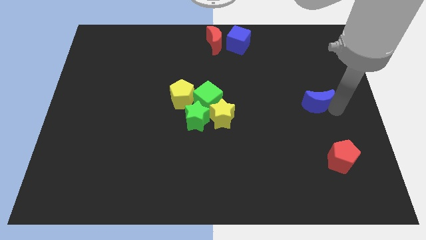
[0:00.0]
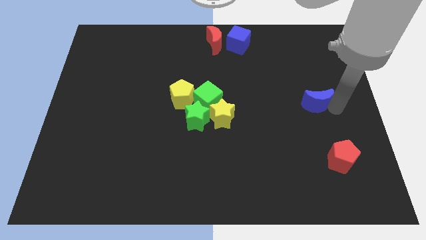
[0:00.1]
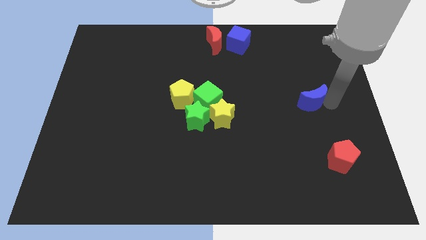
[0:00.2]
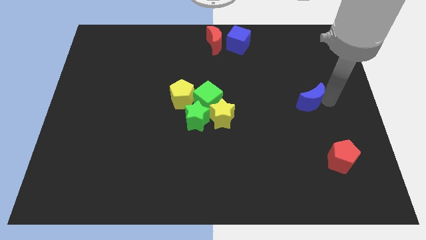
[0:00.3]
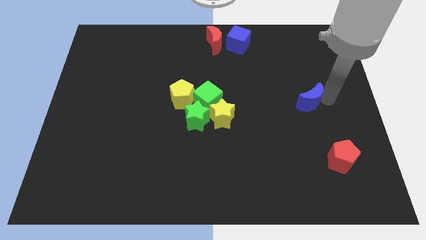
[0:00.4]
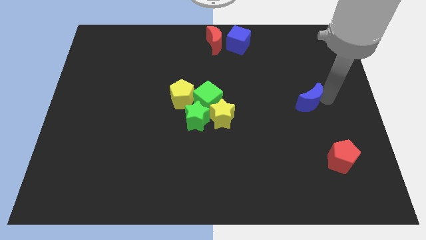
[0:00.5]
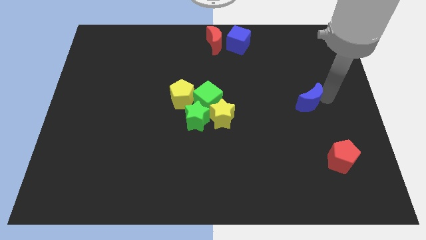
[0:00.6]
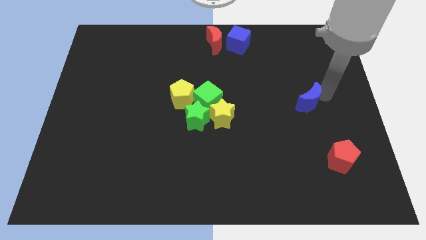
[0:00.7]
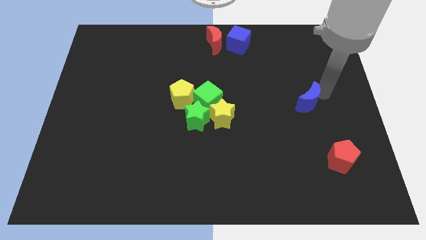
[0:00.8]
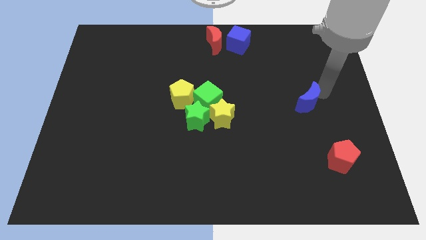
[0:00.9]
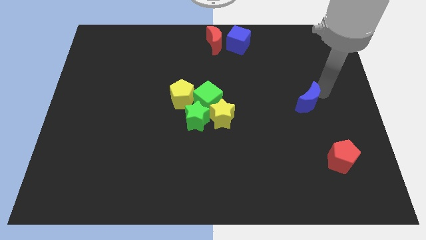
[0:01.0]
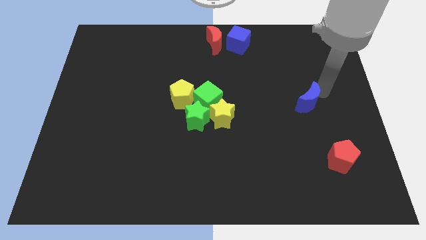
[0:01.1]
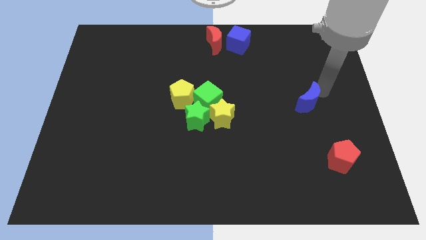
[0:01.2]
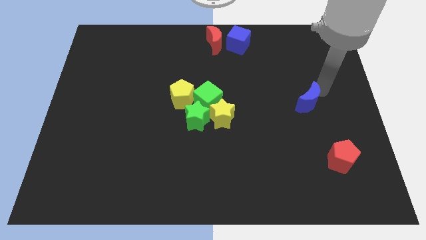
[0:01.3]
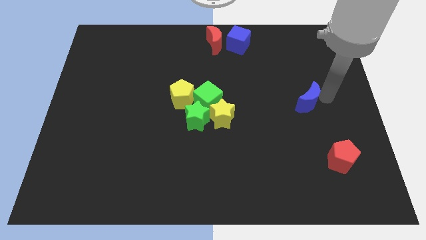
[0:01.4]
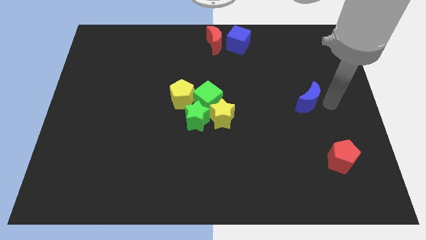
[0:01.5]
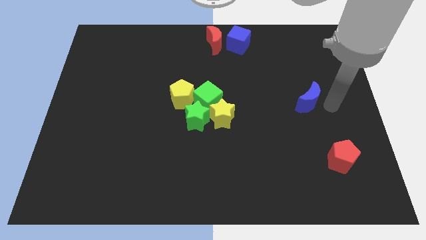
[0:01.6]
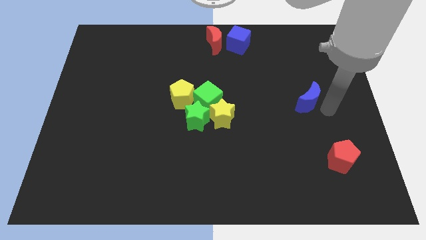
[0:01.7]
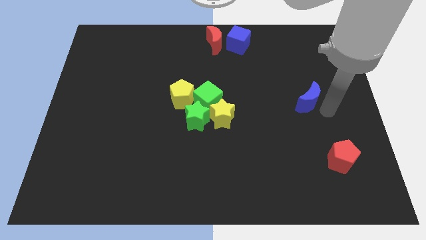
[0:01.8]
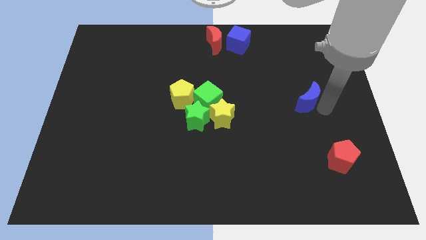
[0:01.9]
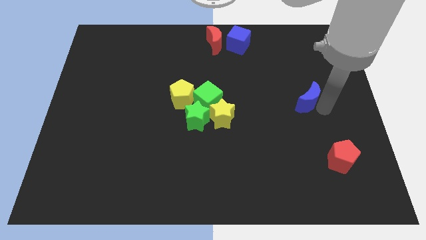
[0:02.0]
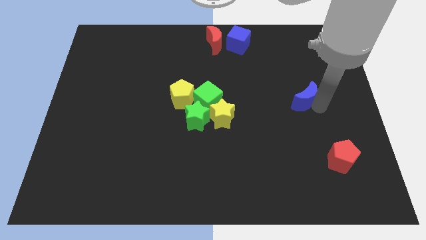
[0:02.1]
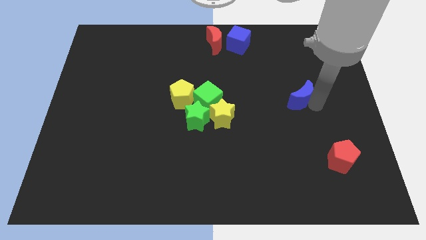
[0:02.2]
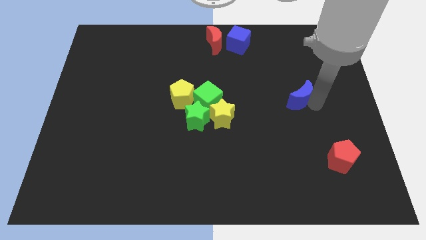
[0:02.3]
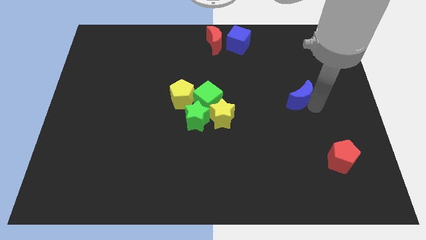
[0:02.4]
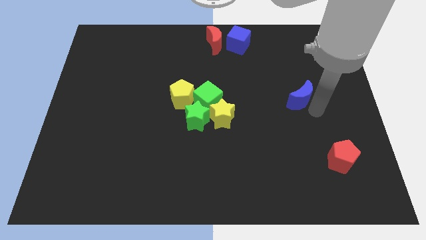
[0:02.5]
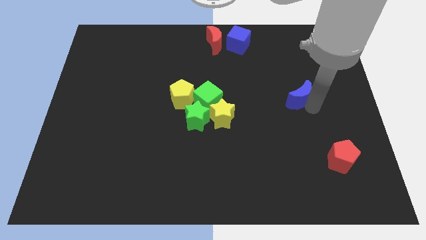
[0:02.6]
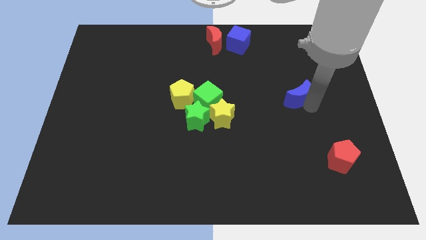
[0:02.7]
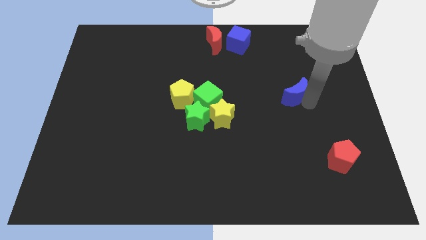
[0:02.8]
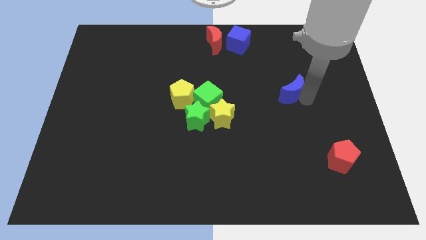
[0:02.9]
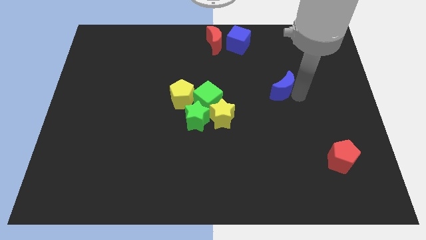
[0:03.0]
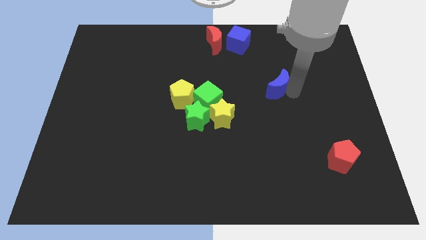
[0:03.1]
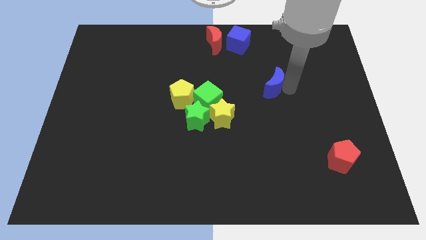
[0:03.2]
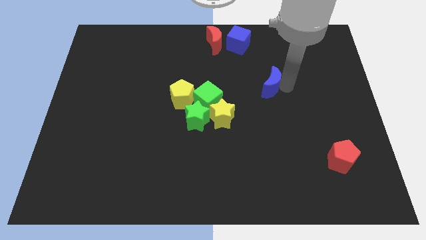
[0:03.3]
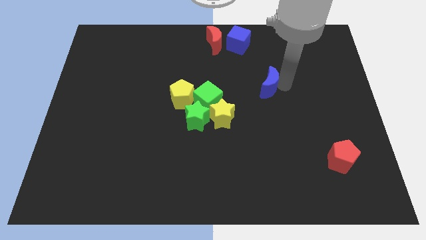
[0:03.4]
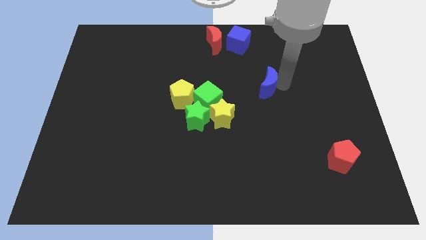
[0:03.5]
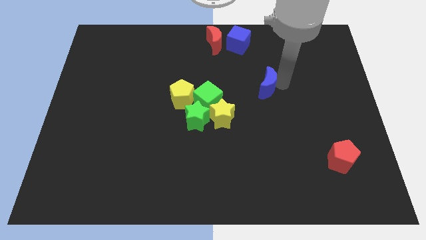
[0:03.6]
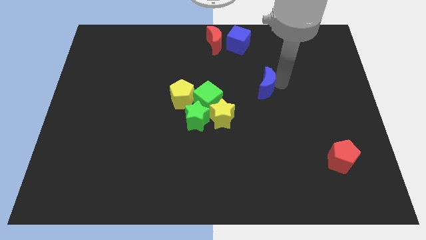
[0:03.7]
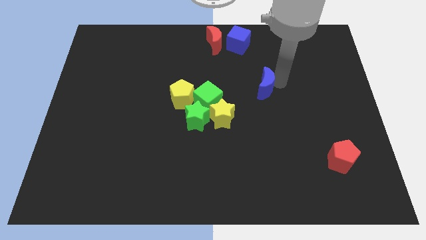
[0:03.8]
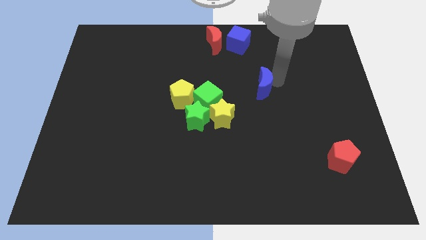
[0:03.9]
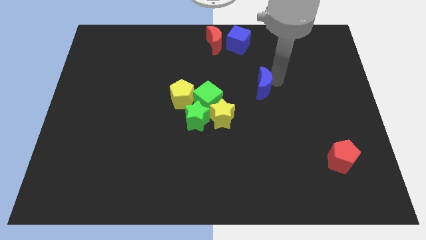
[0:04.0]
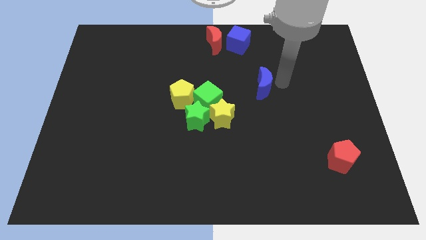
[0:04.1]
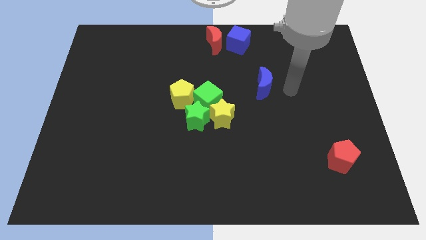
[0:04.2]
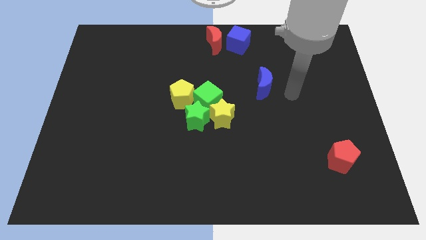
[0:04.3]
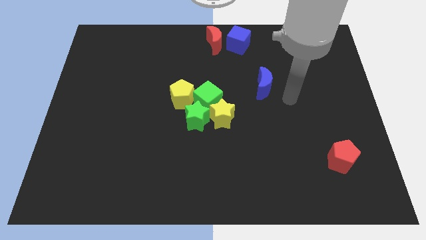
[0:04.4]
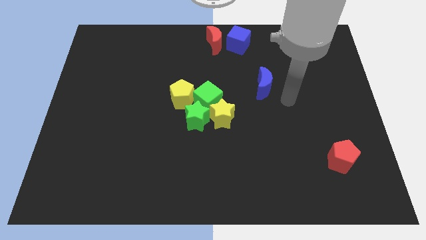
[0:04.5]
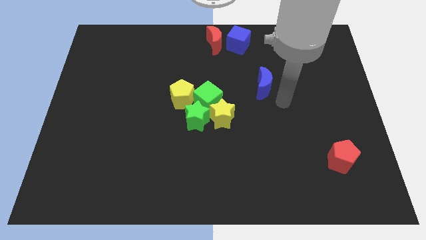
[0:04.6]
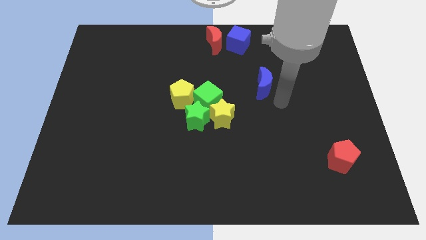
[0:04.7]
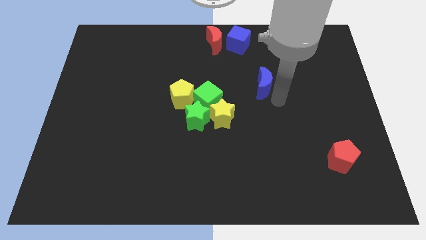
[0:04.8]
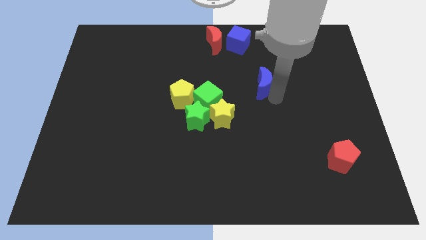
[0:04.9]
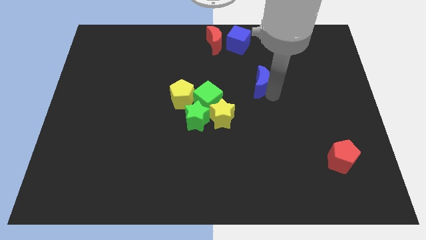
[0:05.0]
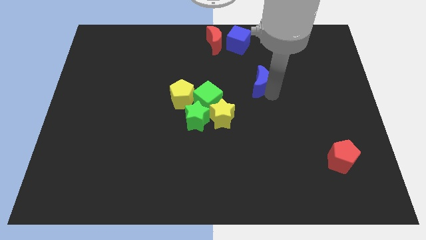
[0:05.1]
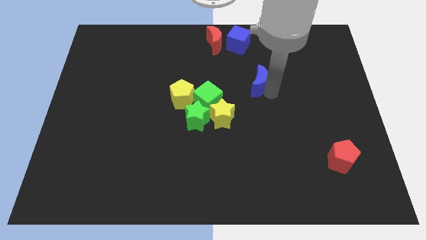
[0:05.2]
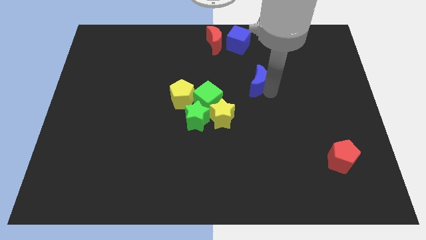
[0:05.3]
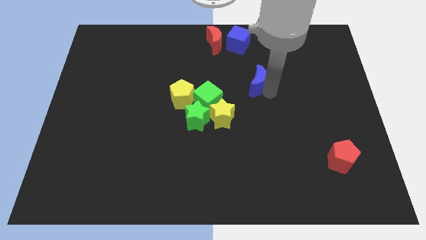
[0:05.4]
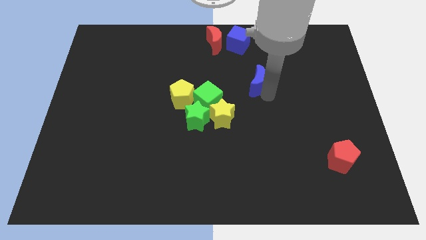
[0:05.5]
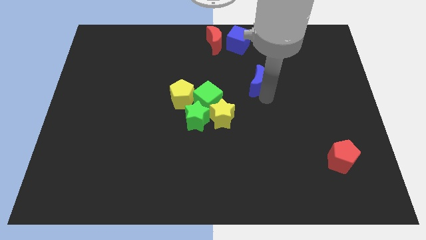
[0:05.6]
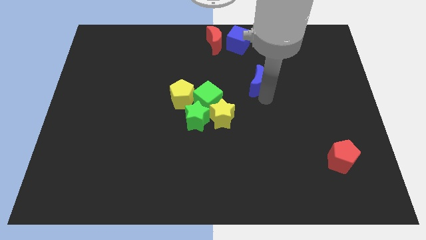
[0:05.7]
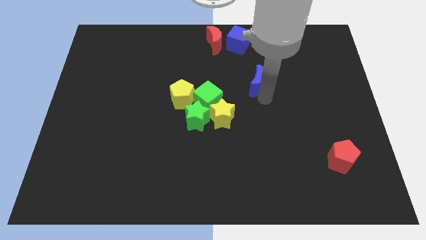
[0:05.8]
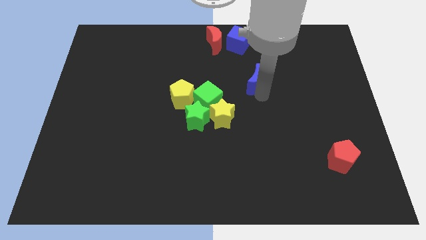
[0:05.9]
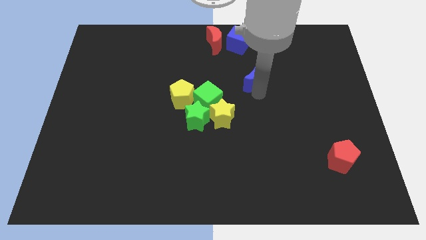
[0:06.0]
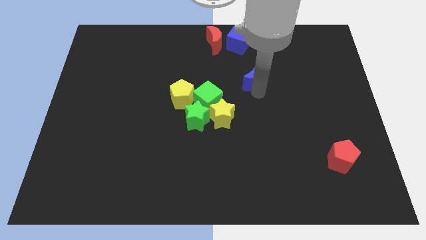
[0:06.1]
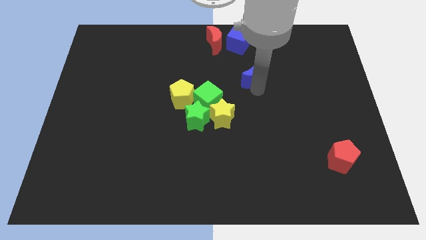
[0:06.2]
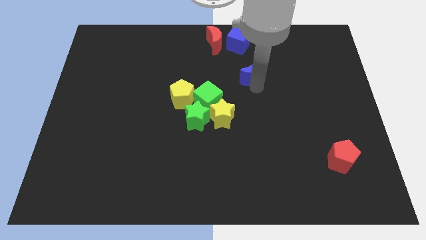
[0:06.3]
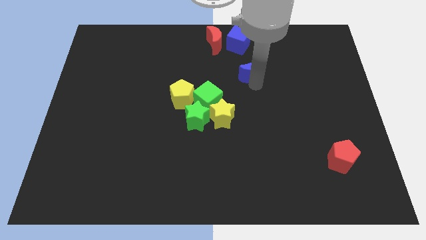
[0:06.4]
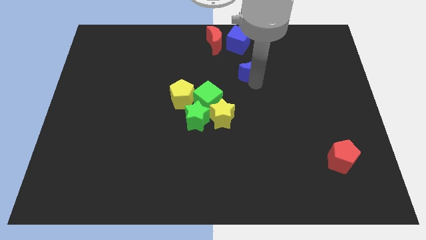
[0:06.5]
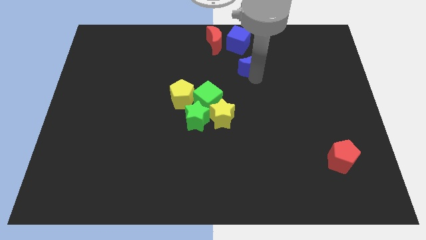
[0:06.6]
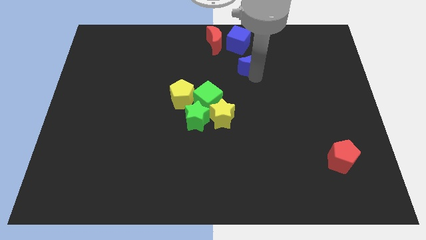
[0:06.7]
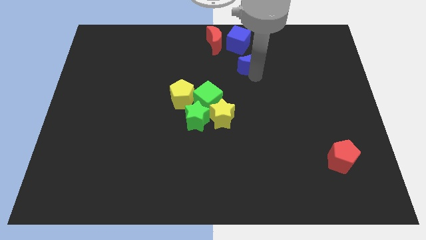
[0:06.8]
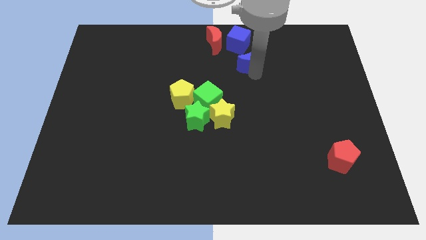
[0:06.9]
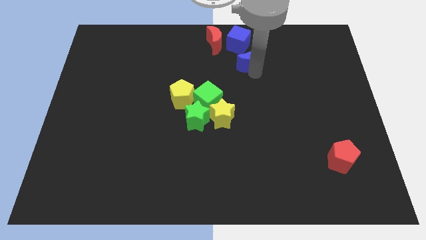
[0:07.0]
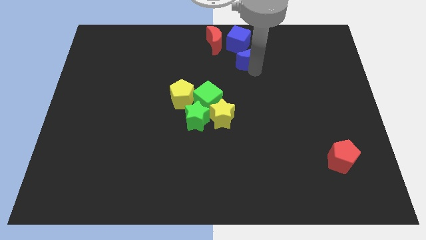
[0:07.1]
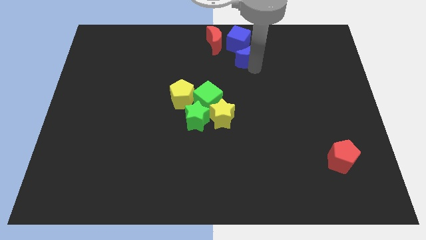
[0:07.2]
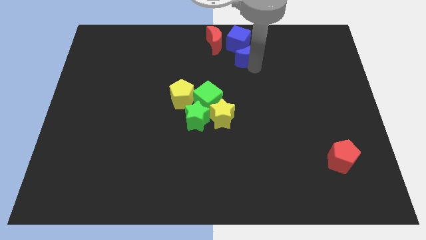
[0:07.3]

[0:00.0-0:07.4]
move the blue crescent into the blue cube

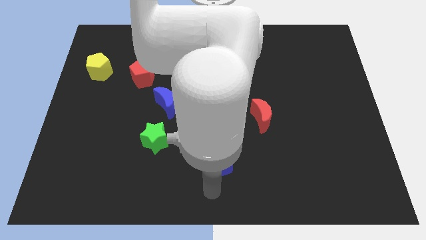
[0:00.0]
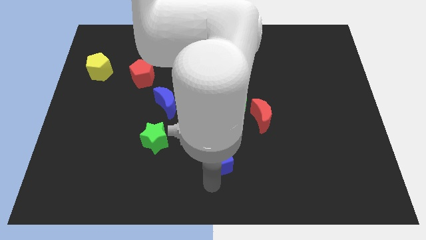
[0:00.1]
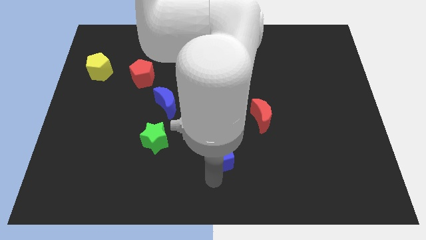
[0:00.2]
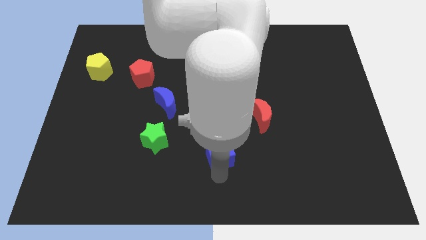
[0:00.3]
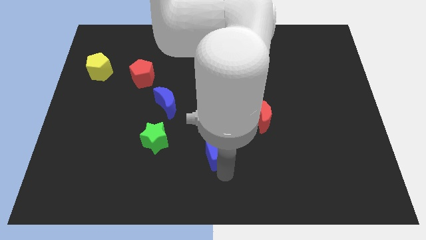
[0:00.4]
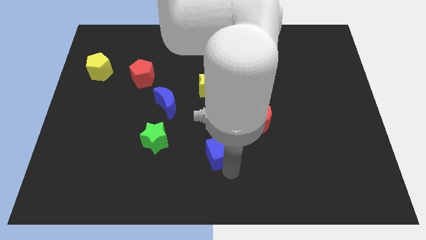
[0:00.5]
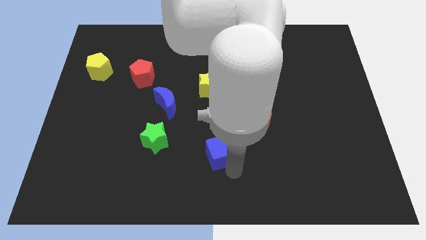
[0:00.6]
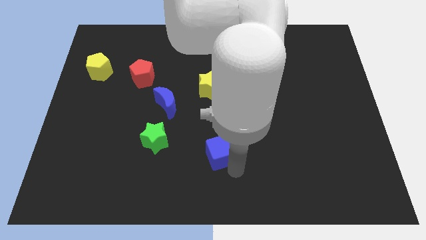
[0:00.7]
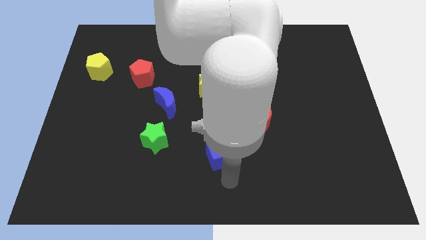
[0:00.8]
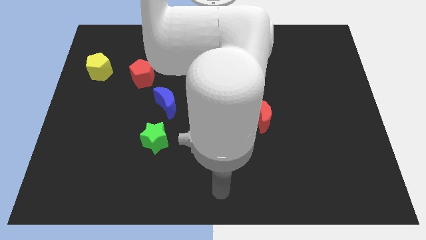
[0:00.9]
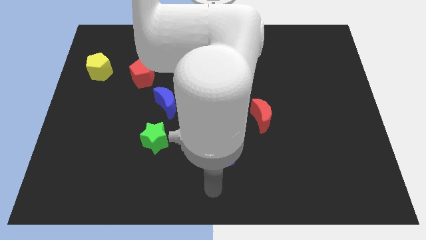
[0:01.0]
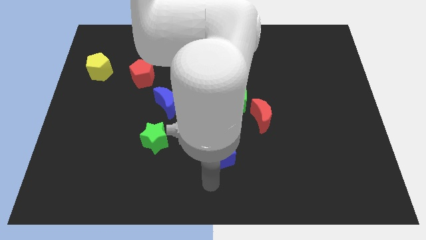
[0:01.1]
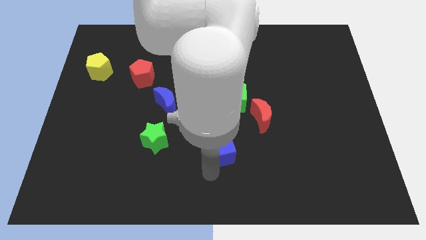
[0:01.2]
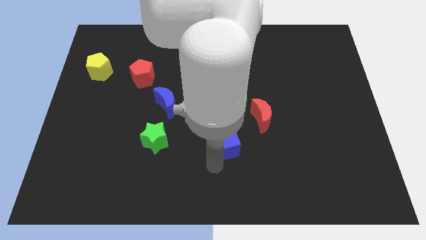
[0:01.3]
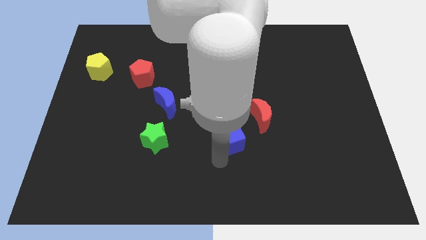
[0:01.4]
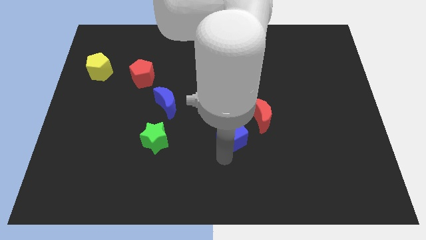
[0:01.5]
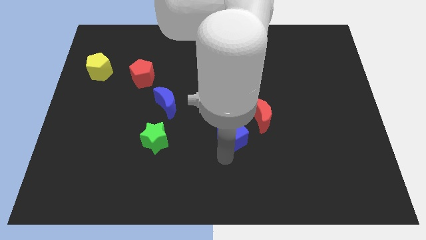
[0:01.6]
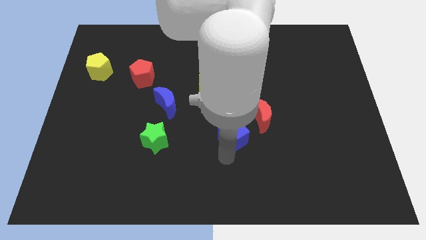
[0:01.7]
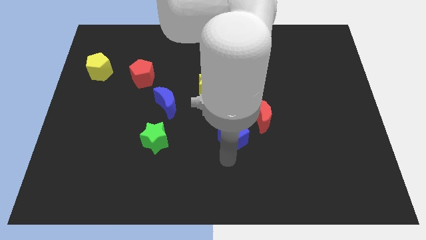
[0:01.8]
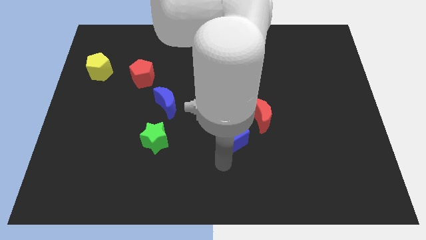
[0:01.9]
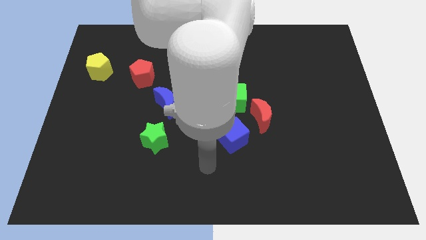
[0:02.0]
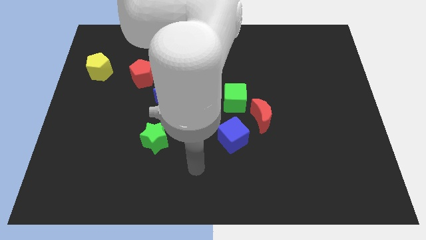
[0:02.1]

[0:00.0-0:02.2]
put the blue cube underneath the green cube
